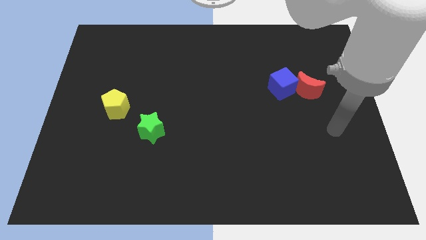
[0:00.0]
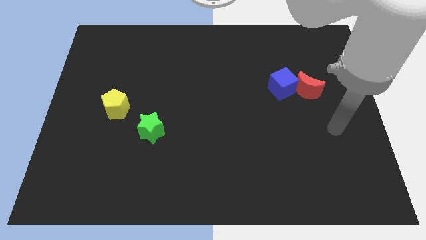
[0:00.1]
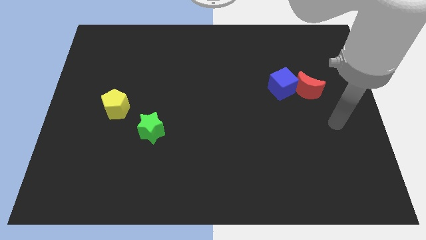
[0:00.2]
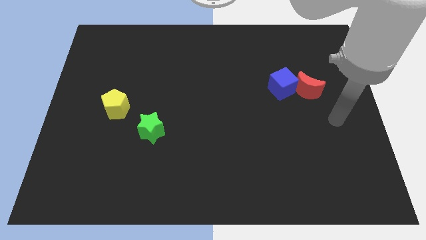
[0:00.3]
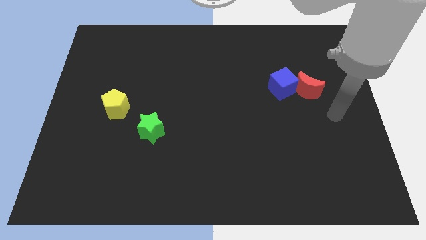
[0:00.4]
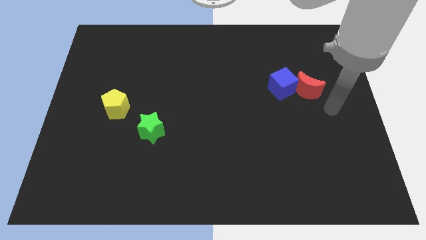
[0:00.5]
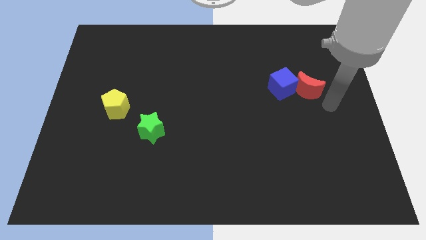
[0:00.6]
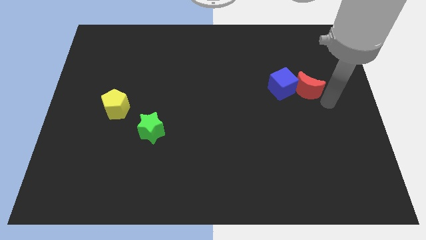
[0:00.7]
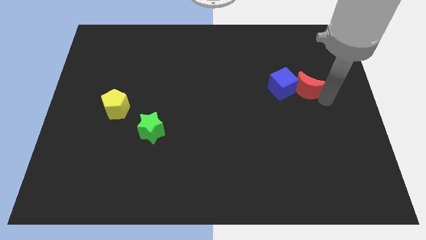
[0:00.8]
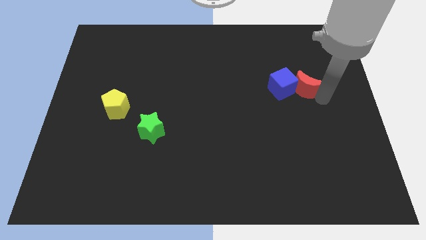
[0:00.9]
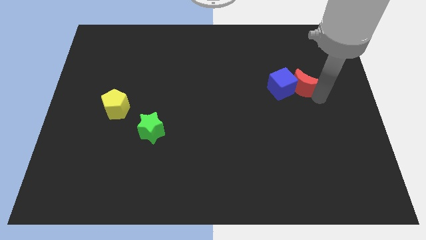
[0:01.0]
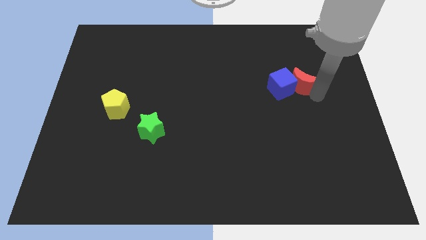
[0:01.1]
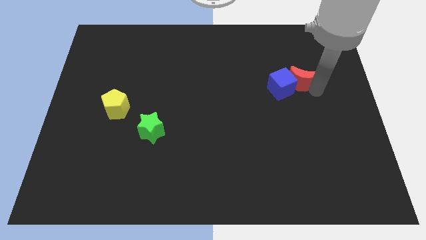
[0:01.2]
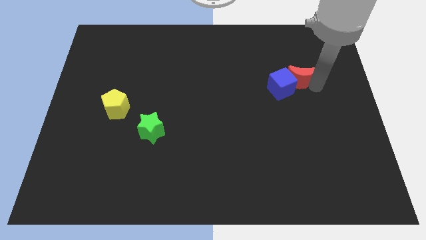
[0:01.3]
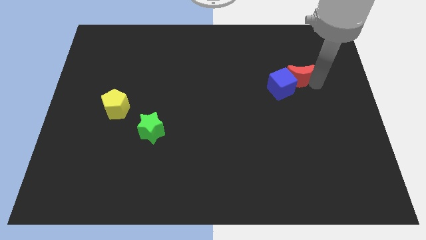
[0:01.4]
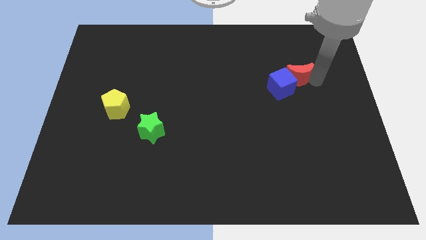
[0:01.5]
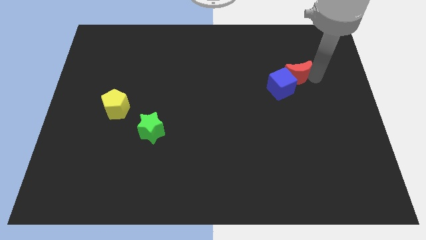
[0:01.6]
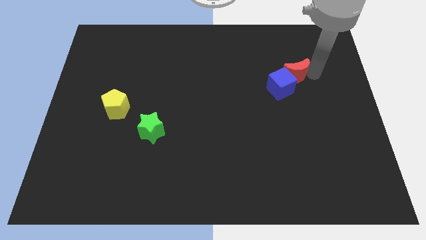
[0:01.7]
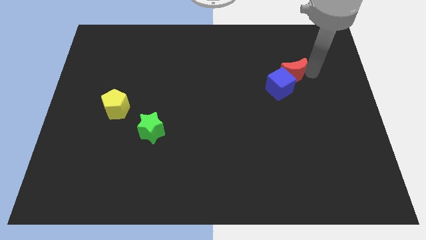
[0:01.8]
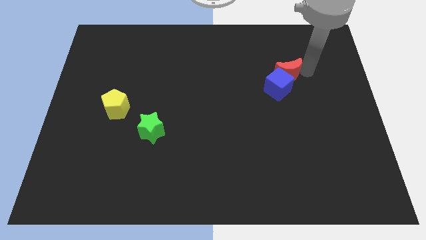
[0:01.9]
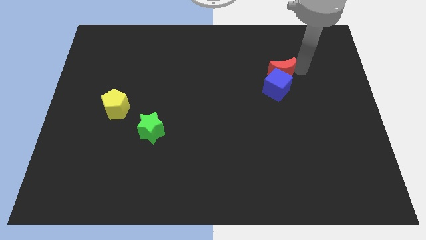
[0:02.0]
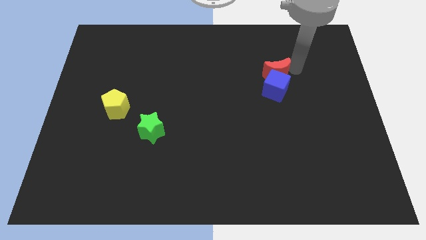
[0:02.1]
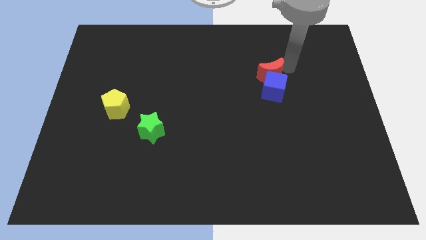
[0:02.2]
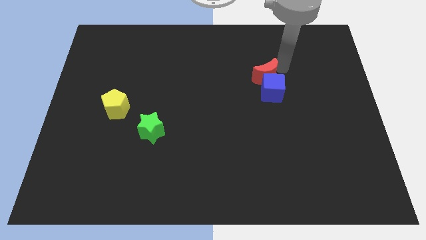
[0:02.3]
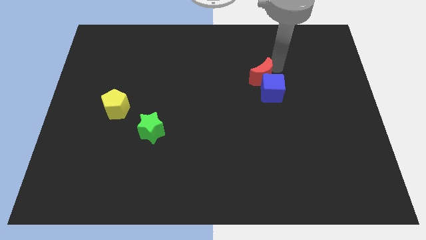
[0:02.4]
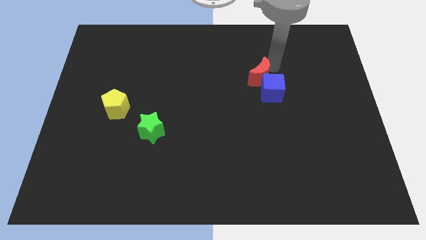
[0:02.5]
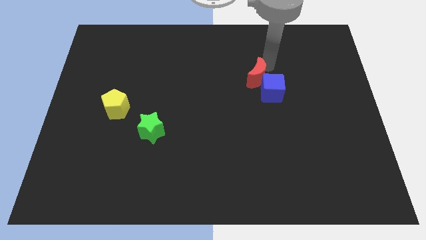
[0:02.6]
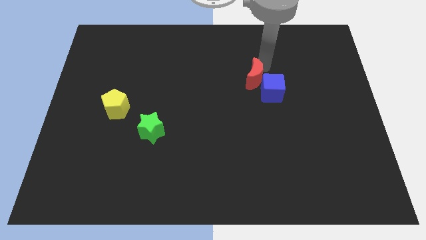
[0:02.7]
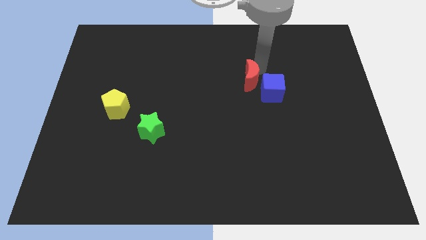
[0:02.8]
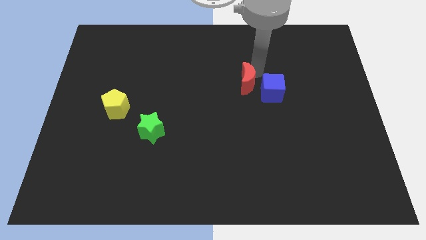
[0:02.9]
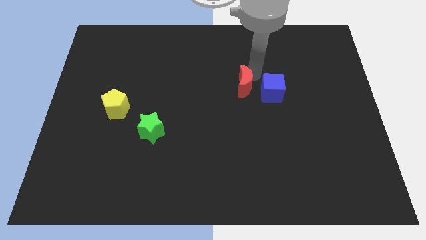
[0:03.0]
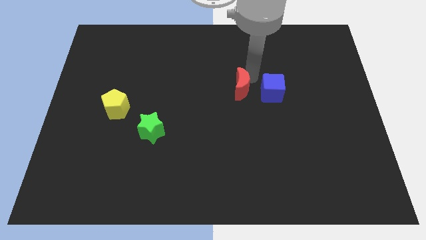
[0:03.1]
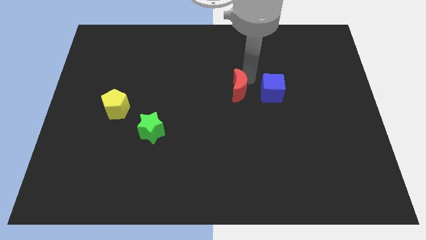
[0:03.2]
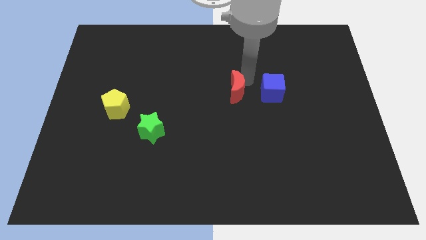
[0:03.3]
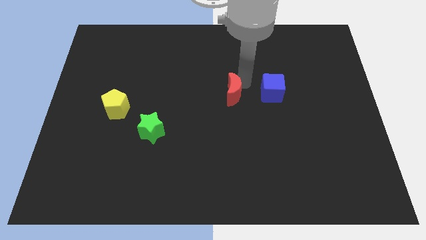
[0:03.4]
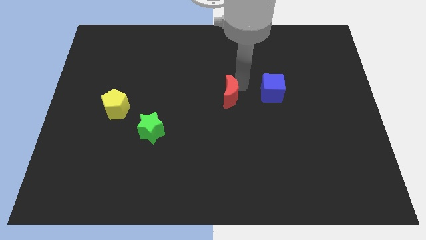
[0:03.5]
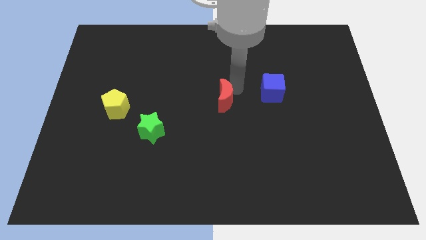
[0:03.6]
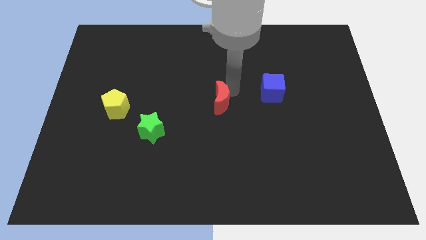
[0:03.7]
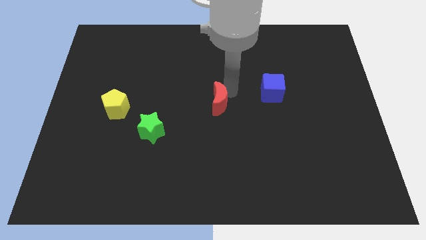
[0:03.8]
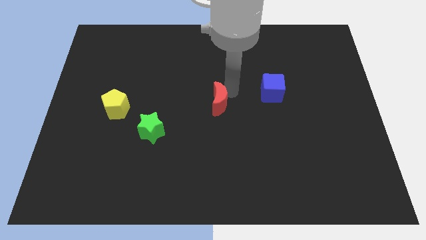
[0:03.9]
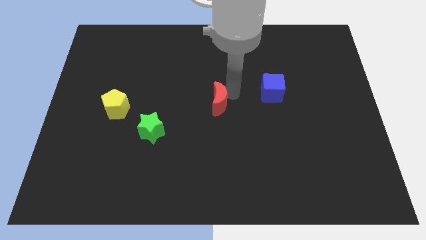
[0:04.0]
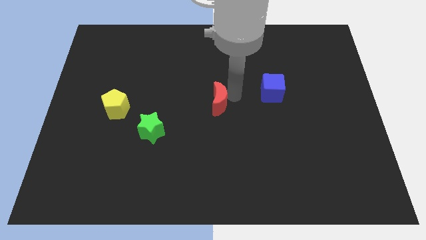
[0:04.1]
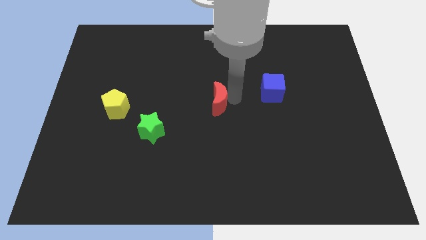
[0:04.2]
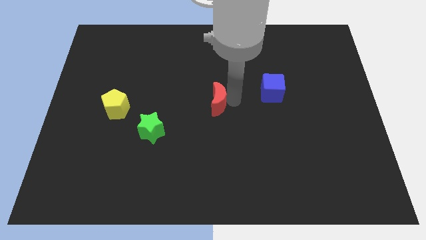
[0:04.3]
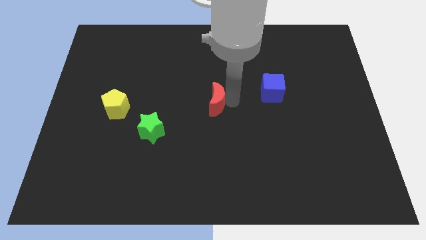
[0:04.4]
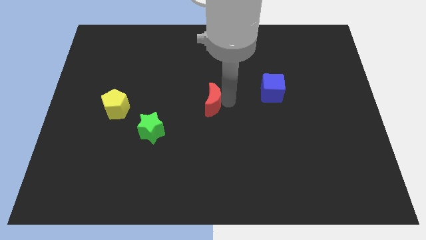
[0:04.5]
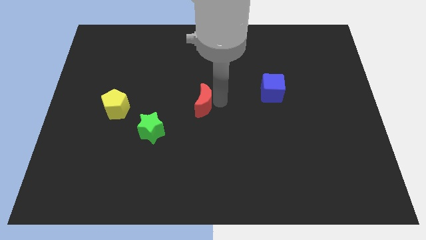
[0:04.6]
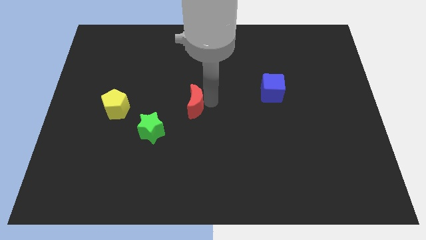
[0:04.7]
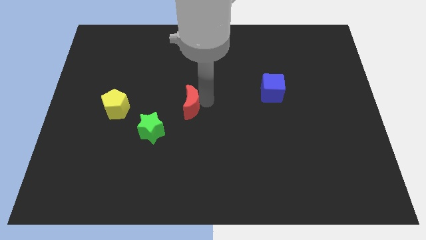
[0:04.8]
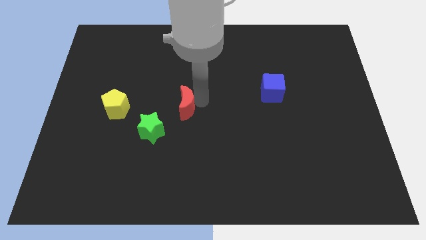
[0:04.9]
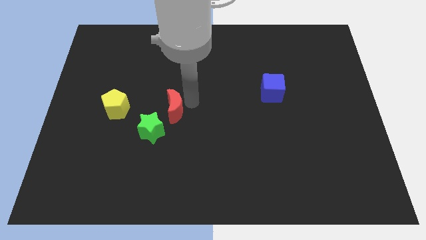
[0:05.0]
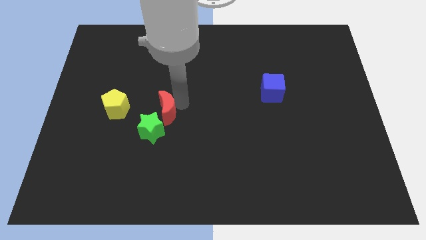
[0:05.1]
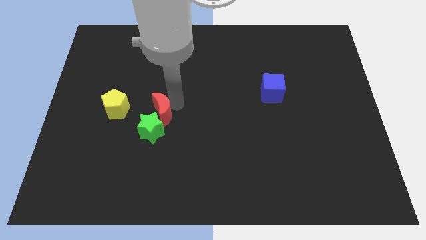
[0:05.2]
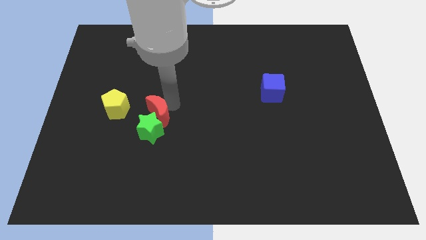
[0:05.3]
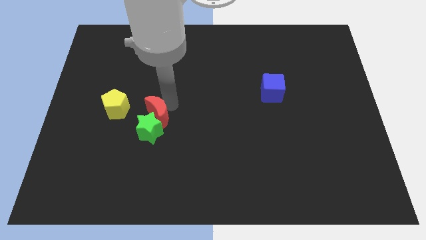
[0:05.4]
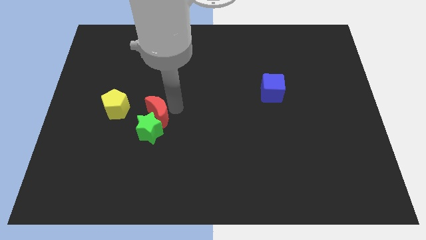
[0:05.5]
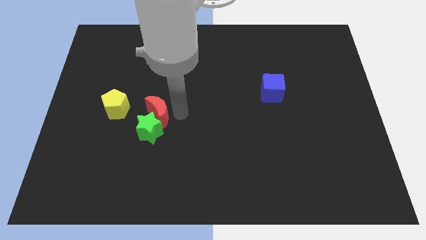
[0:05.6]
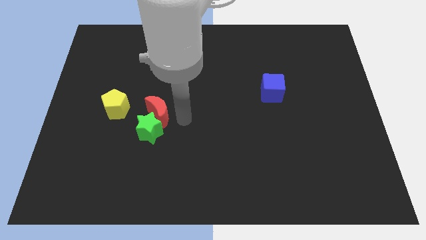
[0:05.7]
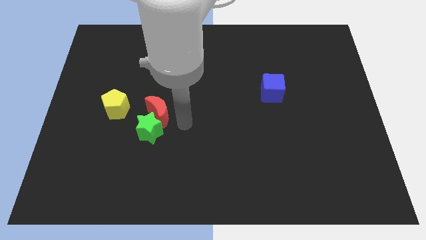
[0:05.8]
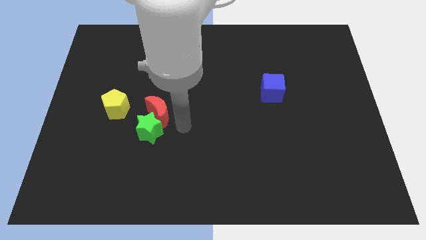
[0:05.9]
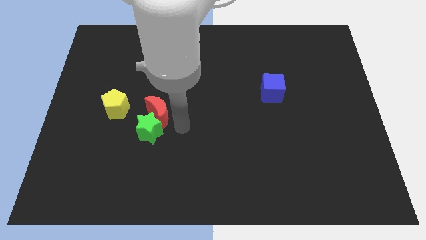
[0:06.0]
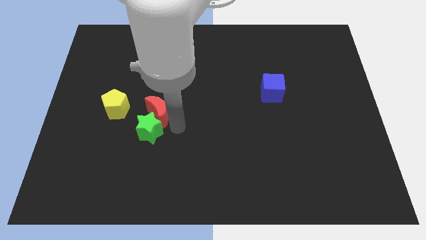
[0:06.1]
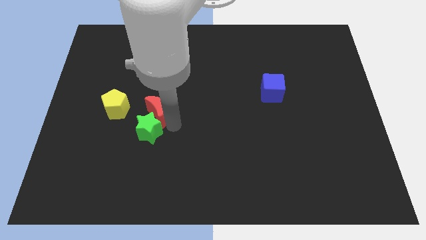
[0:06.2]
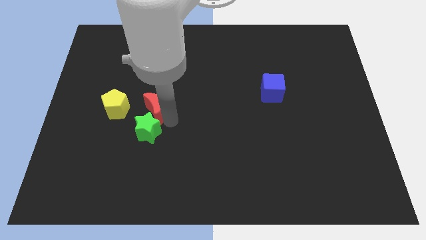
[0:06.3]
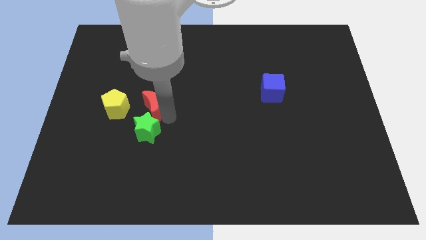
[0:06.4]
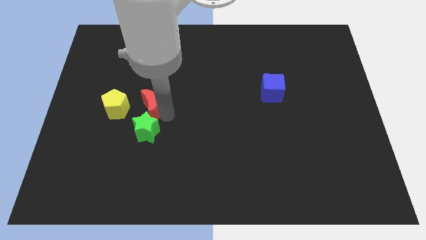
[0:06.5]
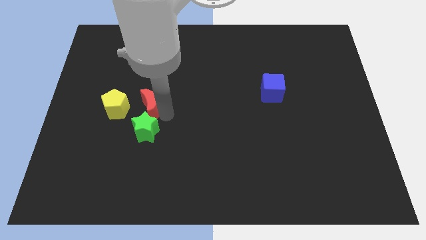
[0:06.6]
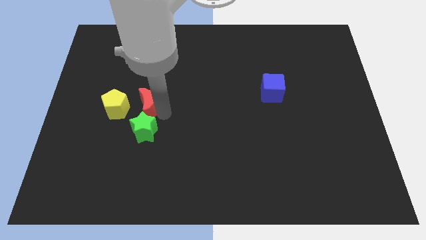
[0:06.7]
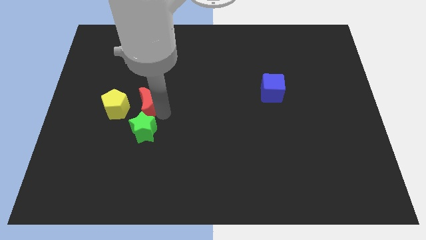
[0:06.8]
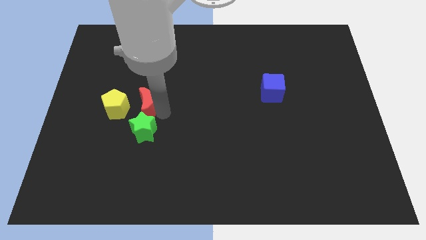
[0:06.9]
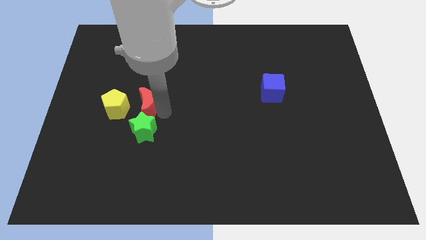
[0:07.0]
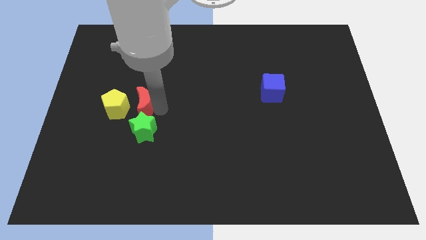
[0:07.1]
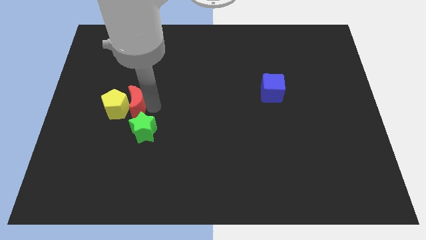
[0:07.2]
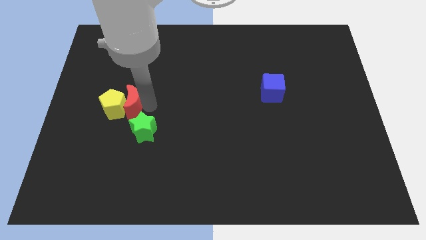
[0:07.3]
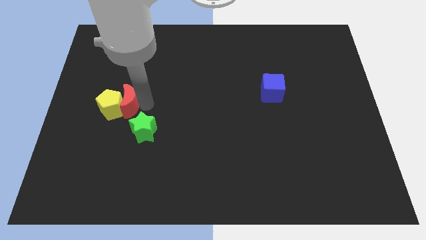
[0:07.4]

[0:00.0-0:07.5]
put the red moon close to the yellow pentagon

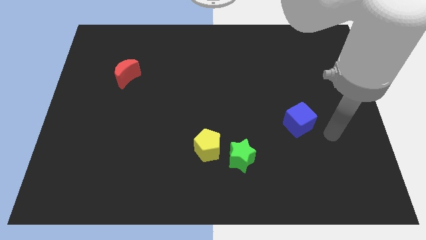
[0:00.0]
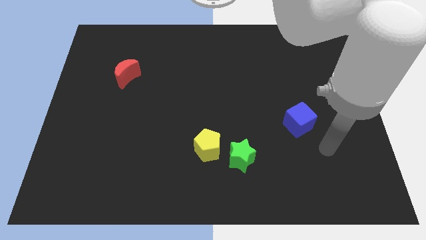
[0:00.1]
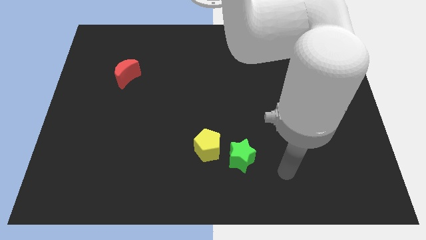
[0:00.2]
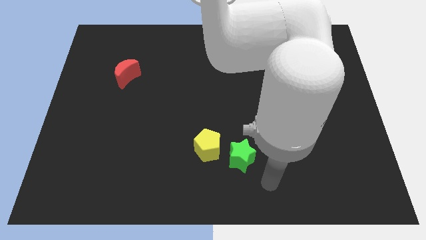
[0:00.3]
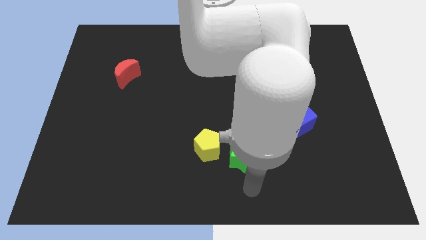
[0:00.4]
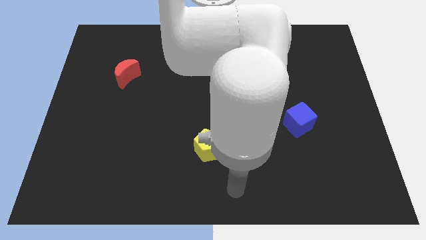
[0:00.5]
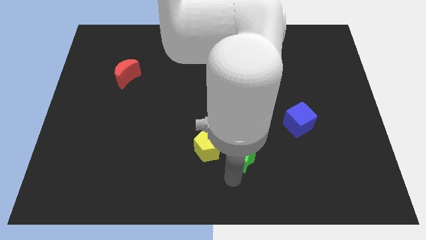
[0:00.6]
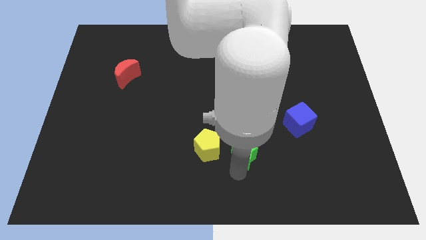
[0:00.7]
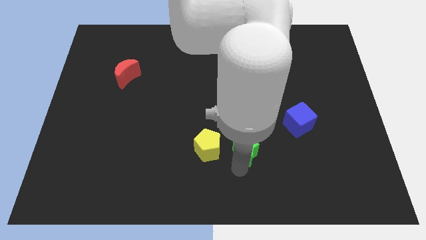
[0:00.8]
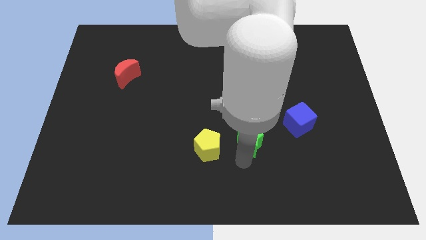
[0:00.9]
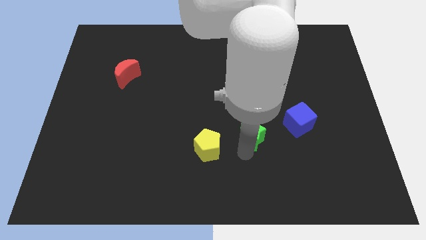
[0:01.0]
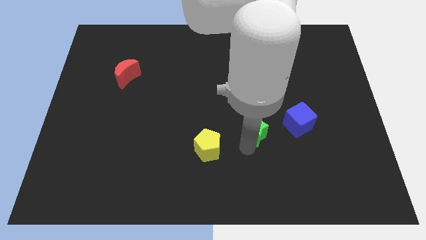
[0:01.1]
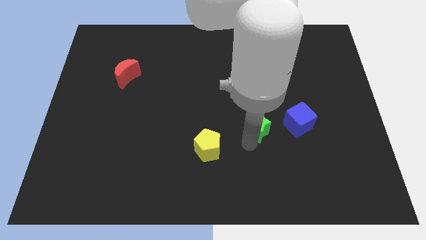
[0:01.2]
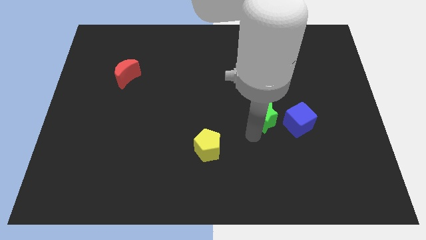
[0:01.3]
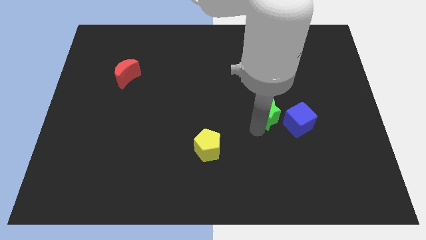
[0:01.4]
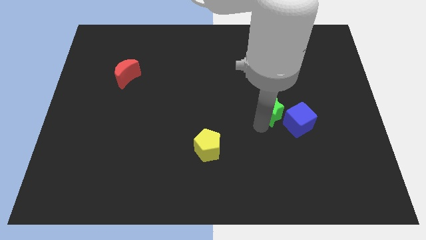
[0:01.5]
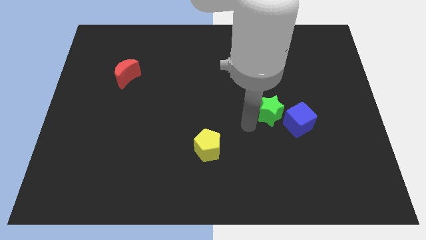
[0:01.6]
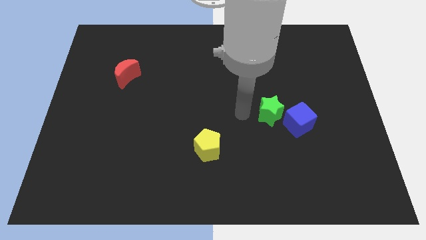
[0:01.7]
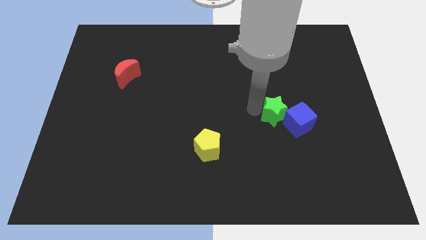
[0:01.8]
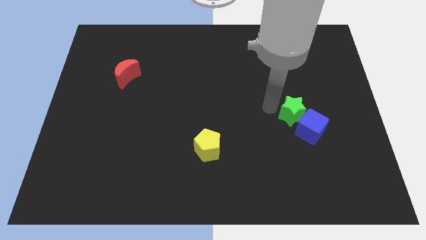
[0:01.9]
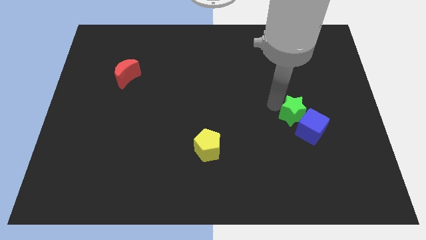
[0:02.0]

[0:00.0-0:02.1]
move the star next to the cube
